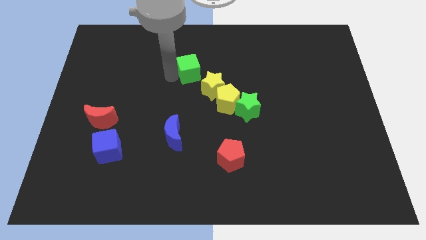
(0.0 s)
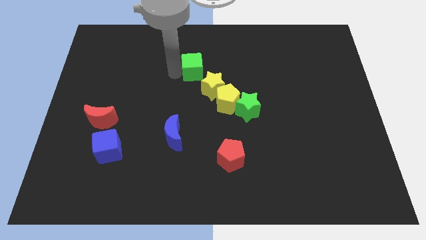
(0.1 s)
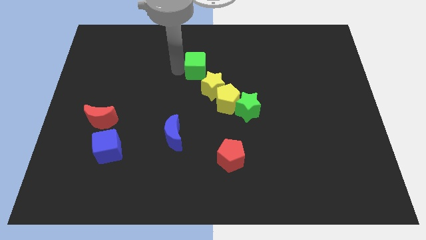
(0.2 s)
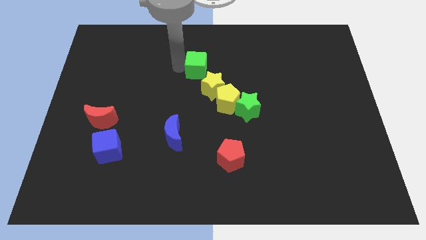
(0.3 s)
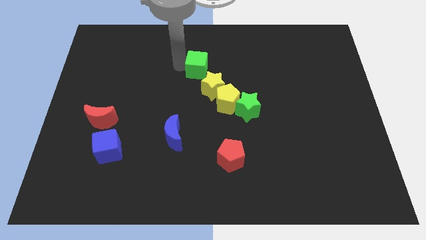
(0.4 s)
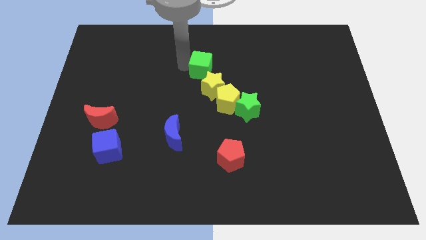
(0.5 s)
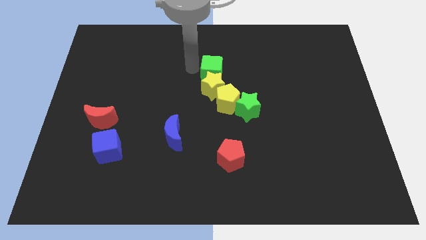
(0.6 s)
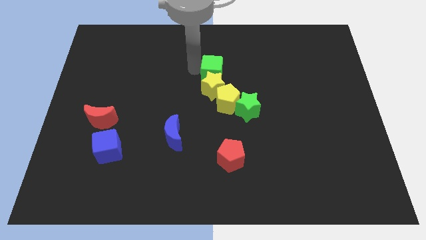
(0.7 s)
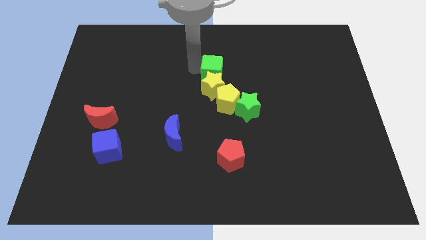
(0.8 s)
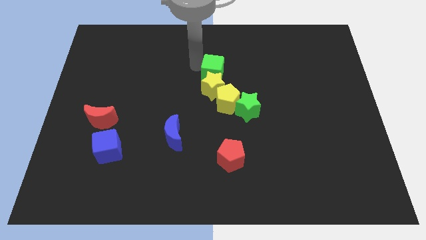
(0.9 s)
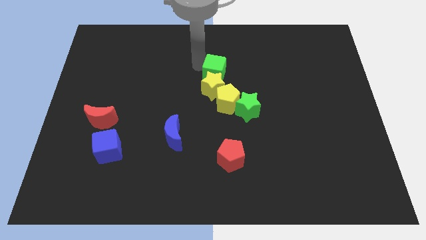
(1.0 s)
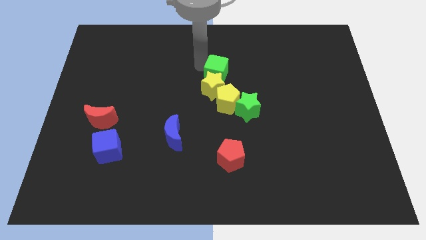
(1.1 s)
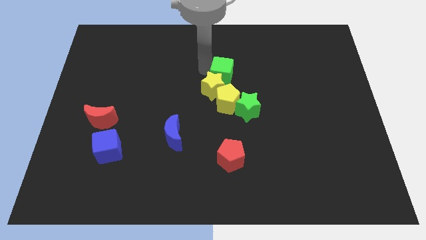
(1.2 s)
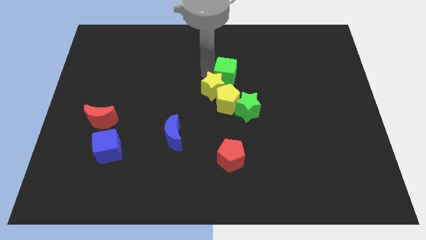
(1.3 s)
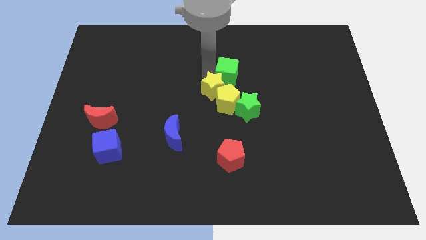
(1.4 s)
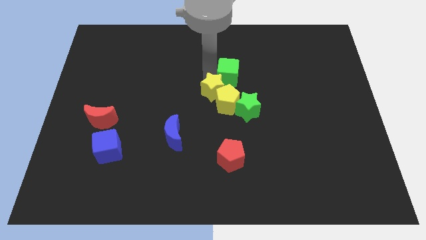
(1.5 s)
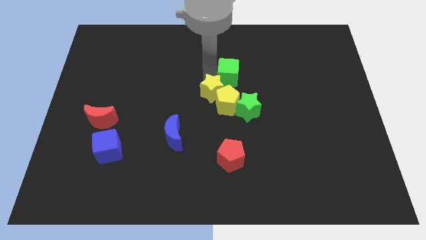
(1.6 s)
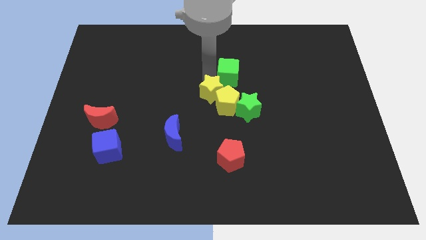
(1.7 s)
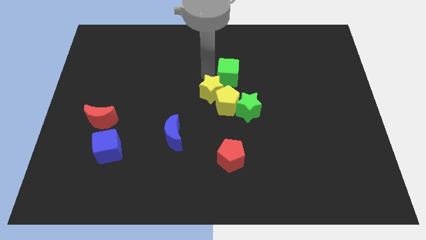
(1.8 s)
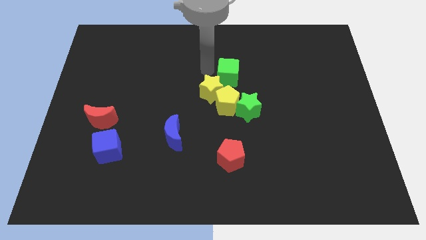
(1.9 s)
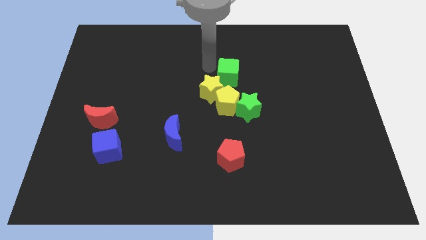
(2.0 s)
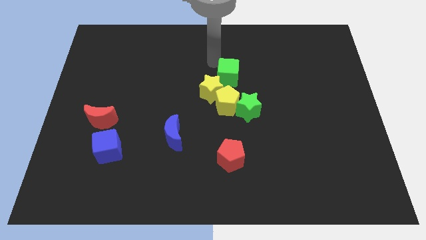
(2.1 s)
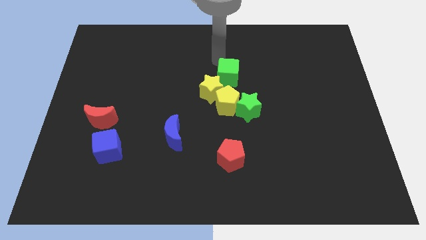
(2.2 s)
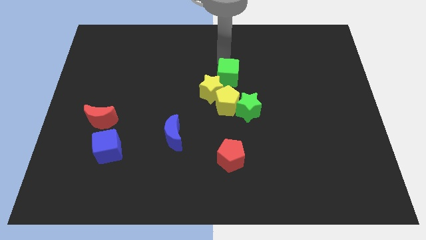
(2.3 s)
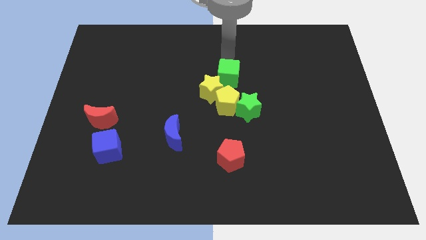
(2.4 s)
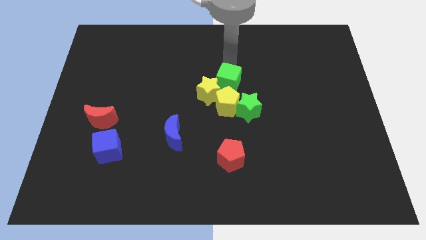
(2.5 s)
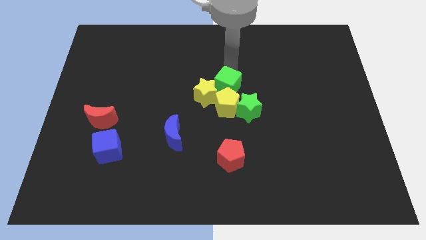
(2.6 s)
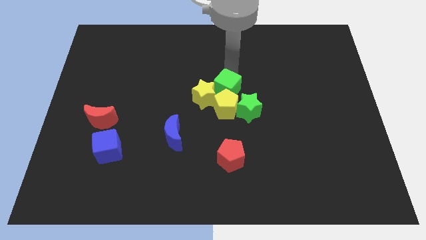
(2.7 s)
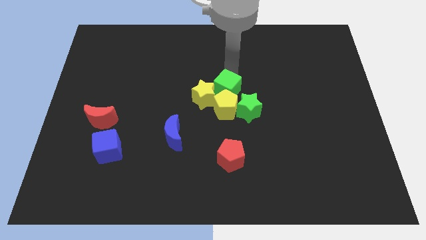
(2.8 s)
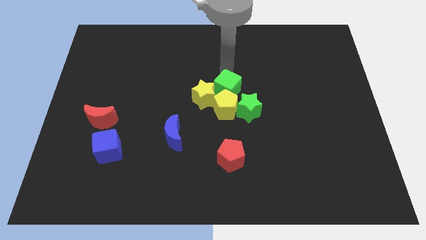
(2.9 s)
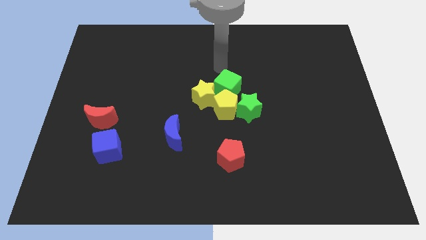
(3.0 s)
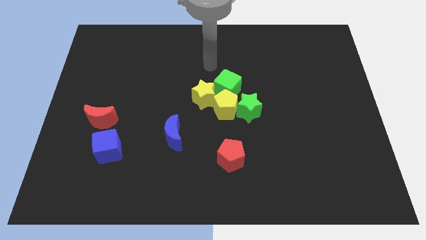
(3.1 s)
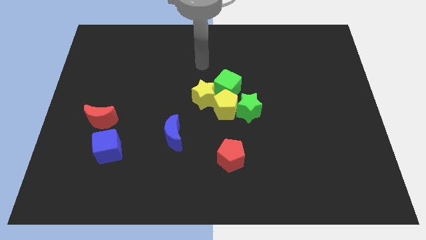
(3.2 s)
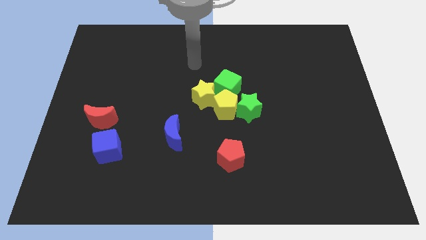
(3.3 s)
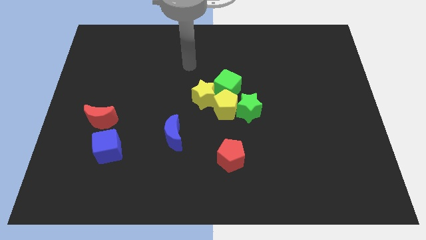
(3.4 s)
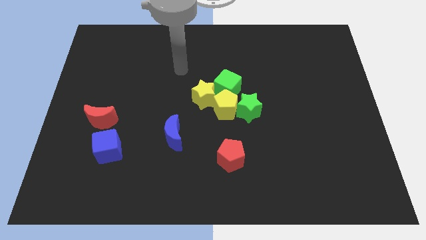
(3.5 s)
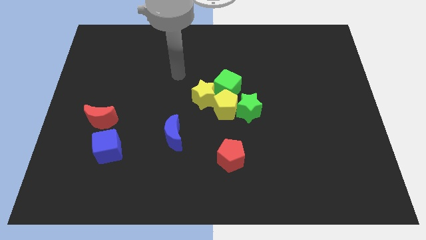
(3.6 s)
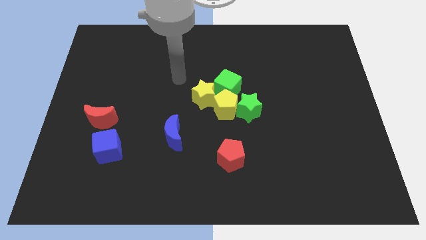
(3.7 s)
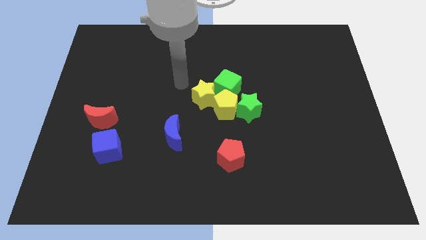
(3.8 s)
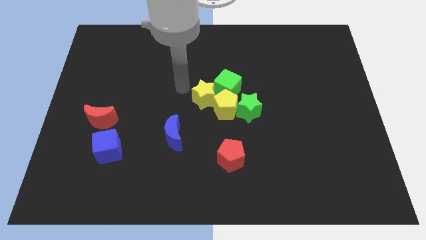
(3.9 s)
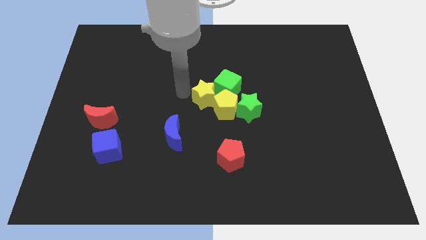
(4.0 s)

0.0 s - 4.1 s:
push the green cube to the top of the yellow pentagon

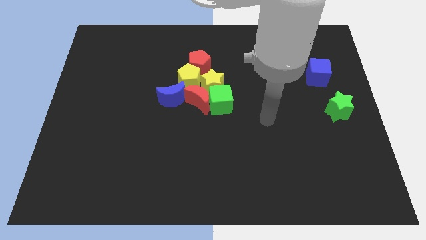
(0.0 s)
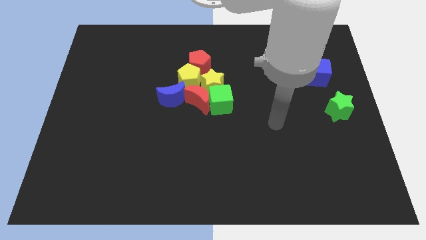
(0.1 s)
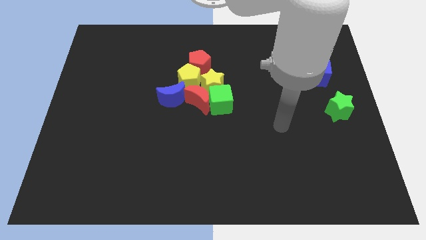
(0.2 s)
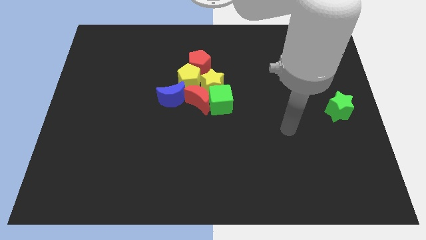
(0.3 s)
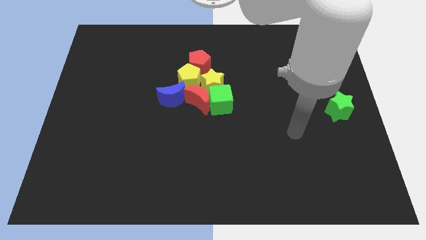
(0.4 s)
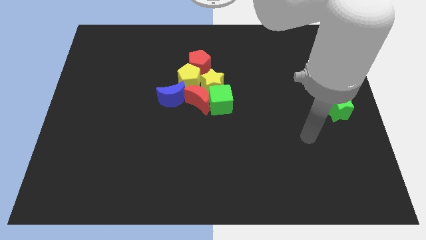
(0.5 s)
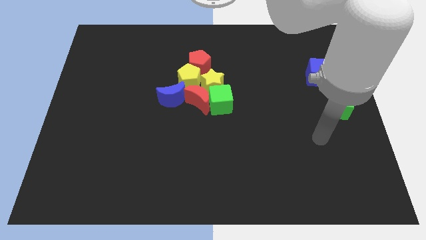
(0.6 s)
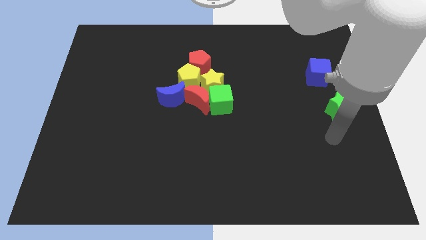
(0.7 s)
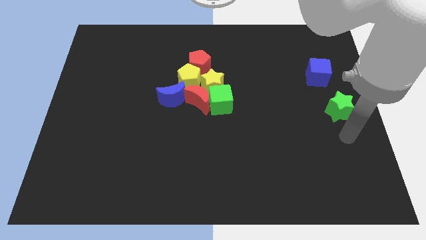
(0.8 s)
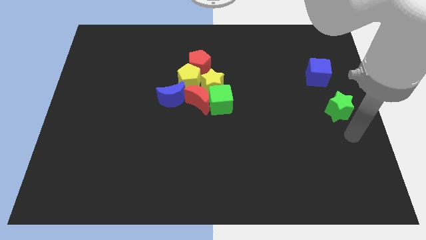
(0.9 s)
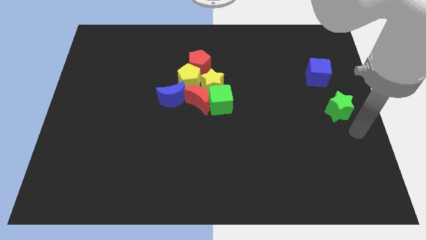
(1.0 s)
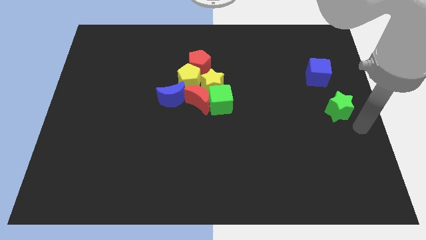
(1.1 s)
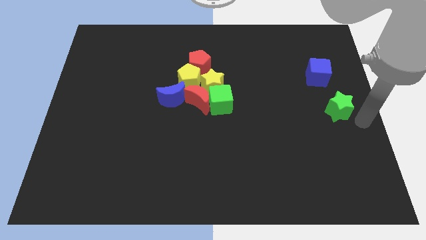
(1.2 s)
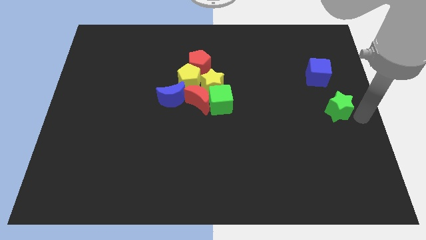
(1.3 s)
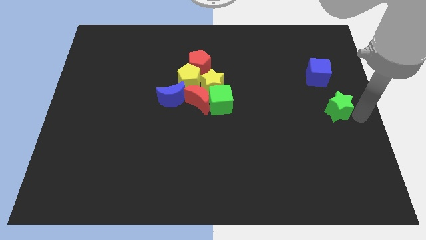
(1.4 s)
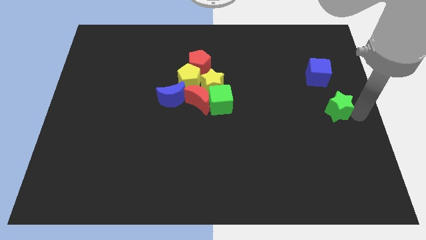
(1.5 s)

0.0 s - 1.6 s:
move the arm to the right of green star

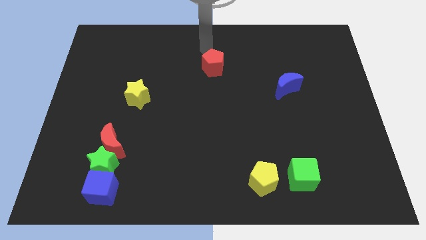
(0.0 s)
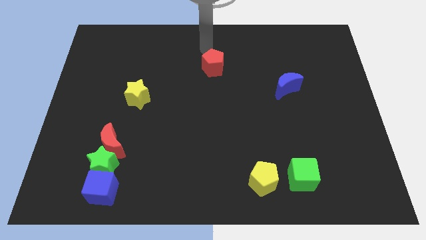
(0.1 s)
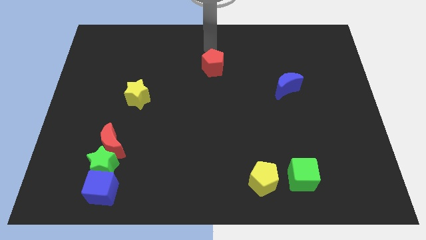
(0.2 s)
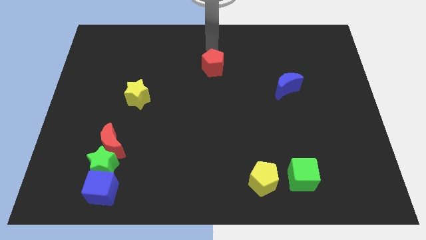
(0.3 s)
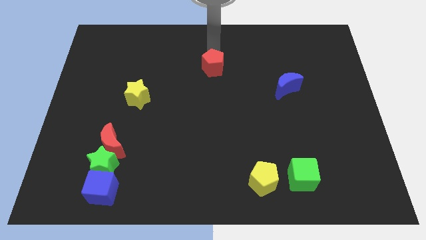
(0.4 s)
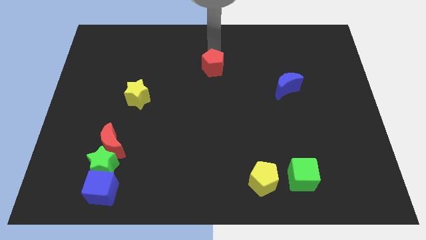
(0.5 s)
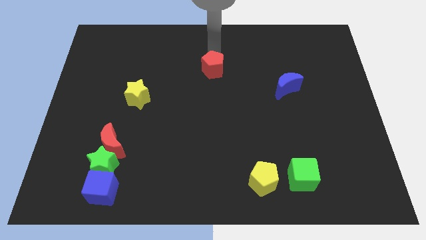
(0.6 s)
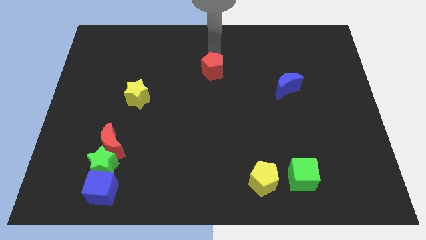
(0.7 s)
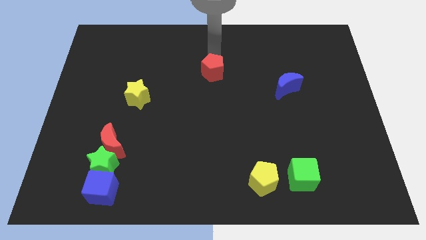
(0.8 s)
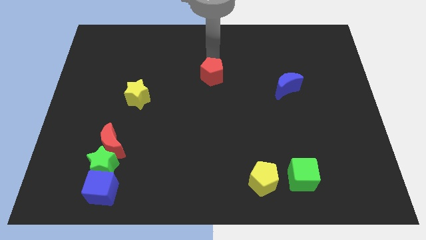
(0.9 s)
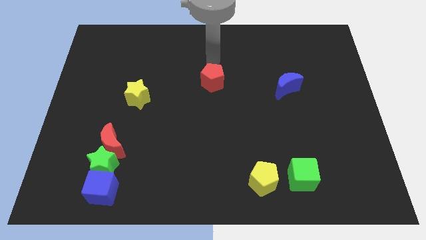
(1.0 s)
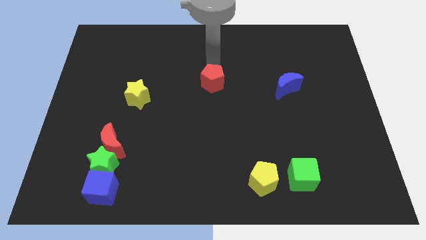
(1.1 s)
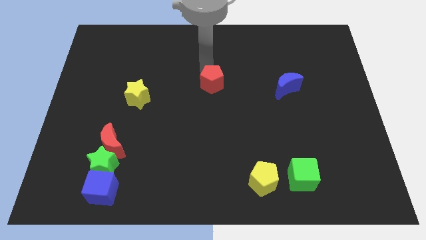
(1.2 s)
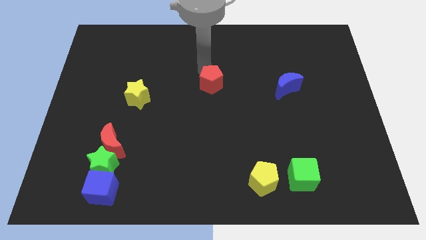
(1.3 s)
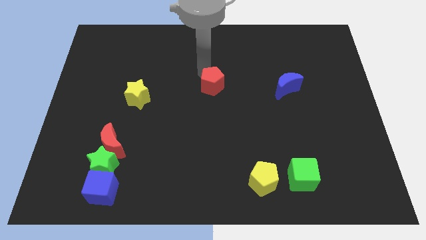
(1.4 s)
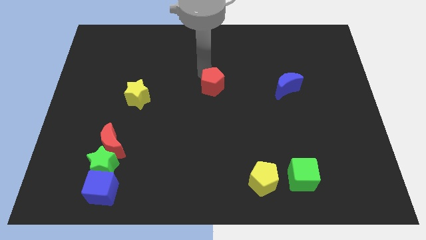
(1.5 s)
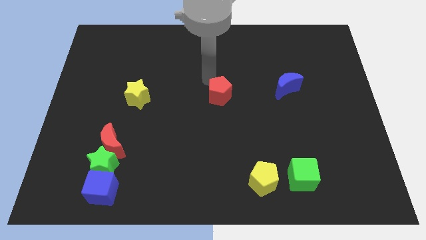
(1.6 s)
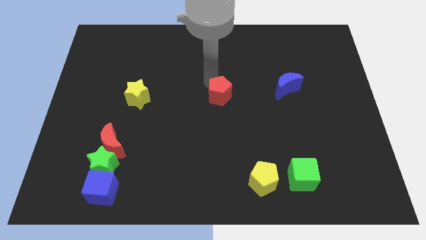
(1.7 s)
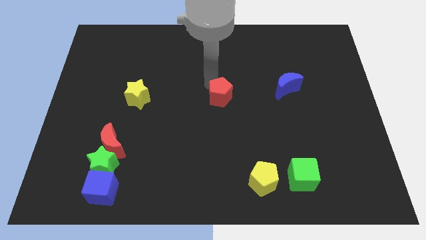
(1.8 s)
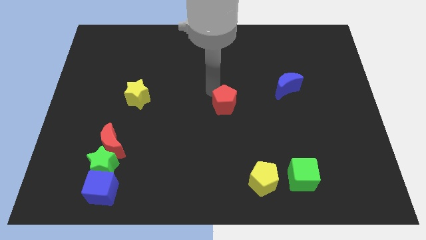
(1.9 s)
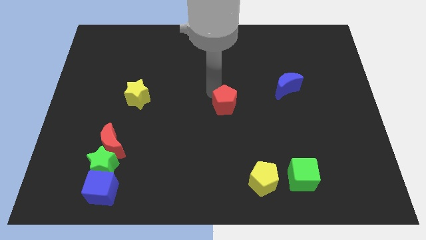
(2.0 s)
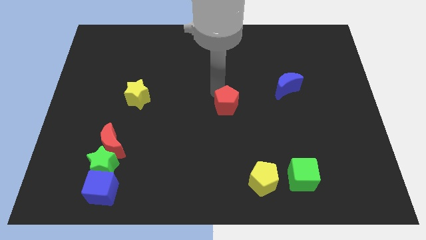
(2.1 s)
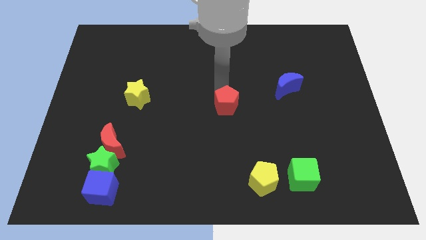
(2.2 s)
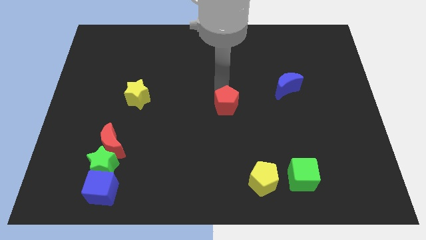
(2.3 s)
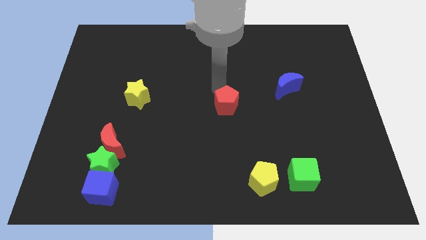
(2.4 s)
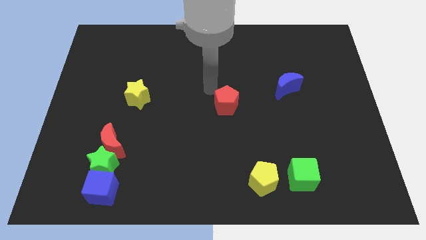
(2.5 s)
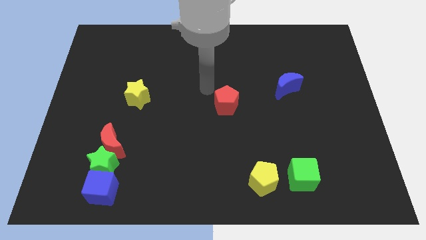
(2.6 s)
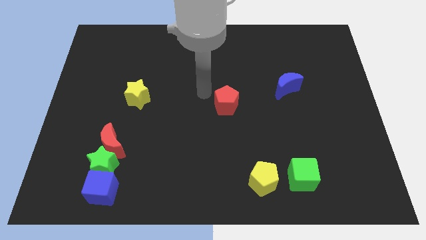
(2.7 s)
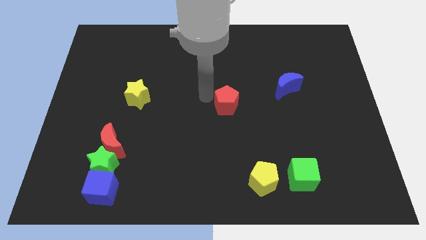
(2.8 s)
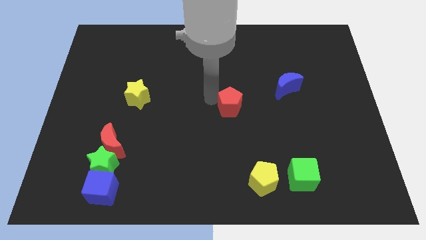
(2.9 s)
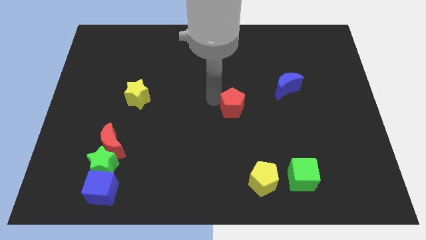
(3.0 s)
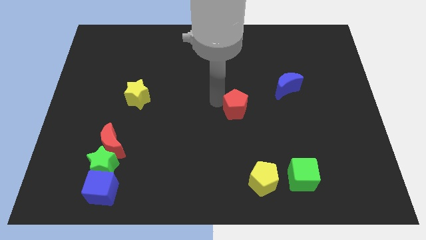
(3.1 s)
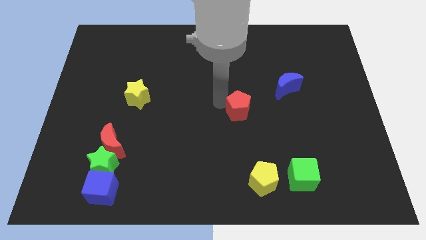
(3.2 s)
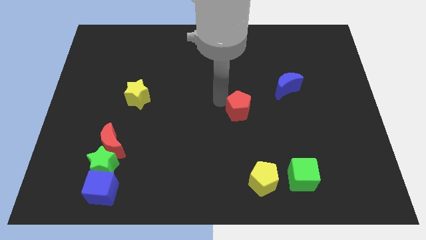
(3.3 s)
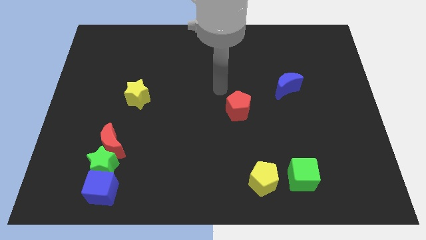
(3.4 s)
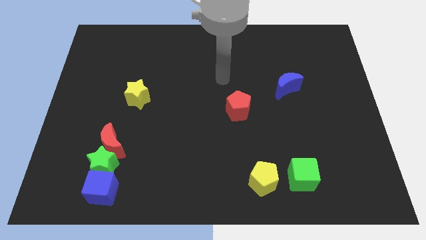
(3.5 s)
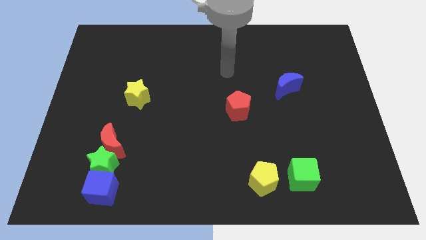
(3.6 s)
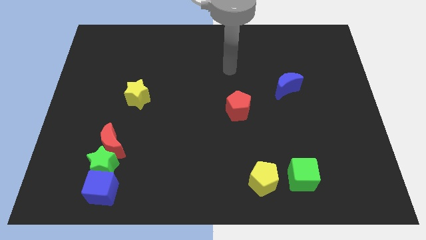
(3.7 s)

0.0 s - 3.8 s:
move the red pentagon diagonally left of the blue crescent
